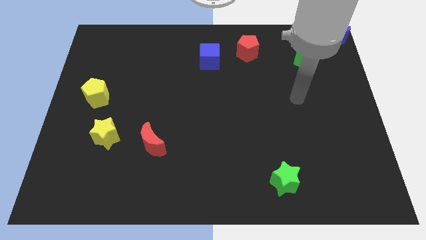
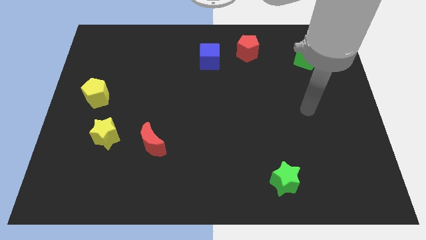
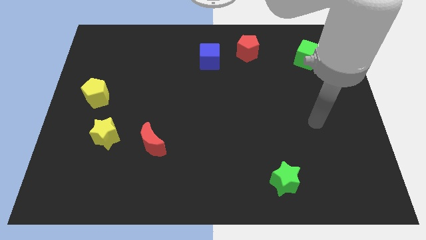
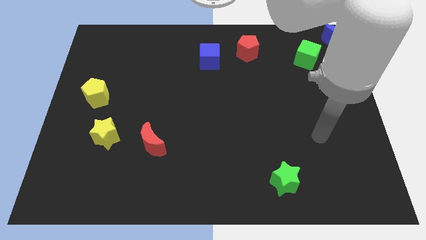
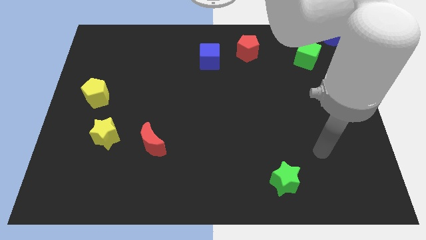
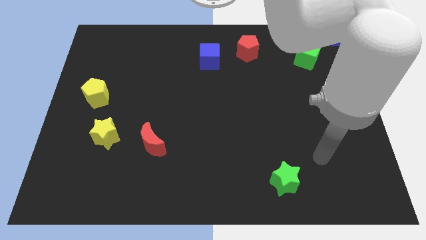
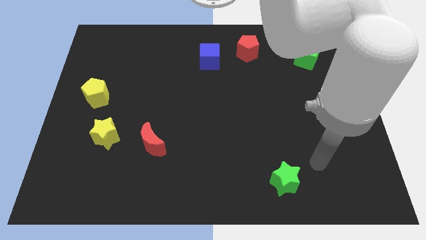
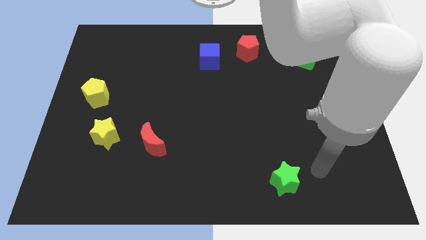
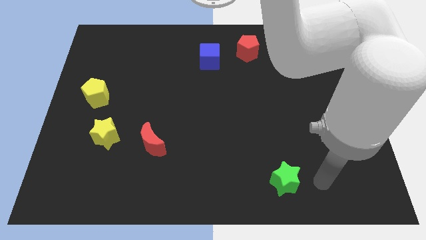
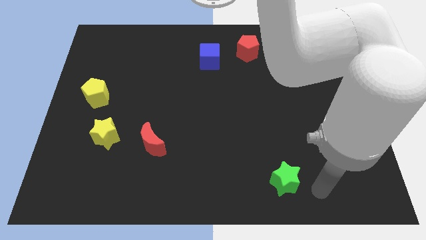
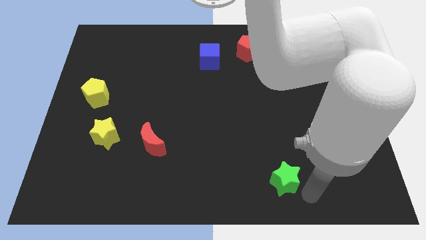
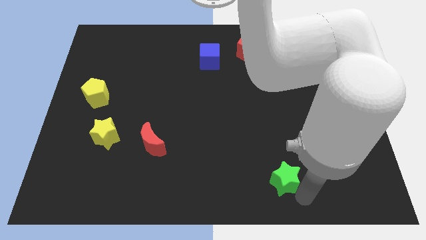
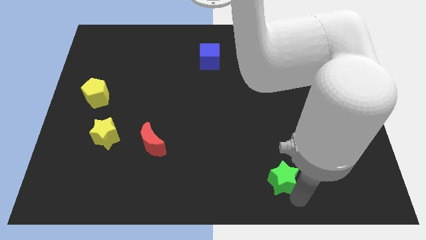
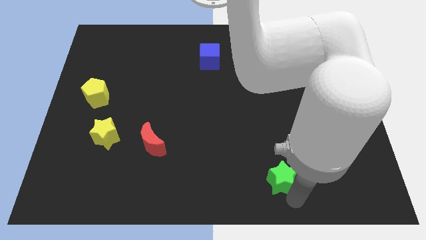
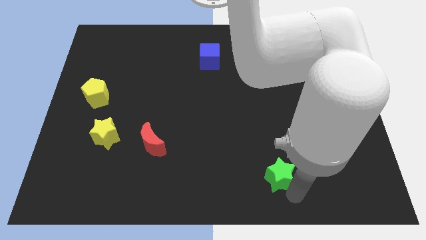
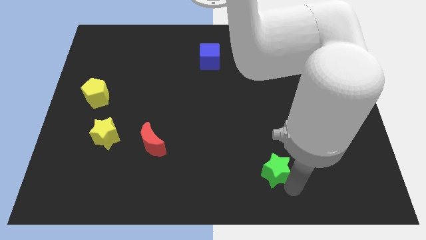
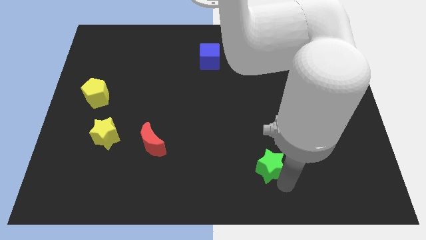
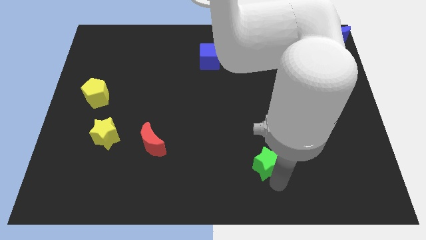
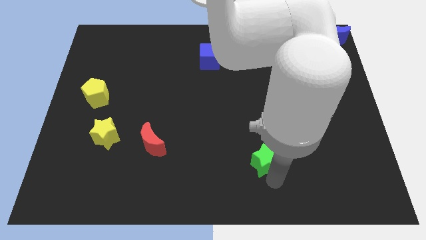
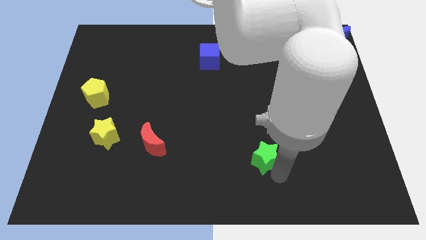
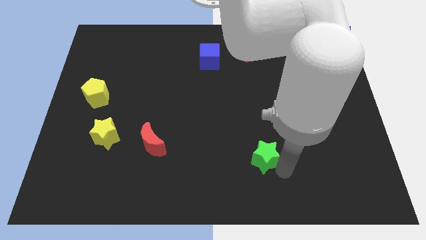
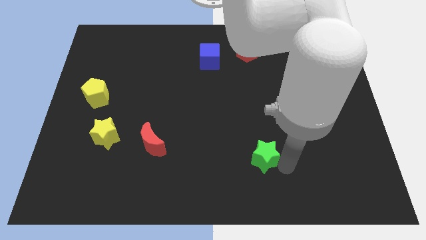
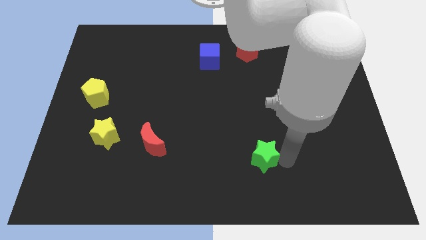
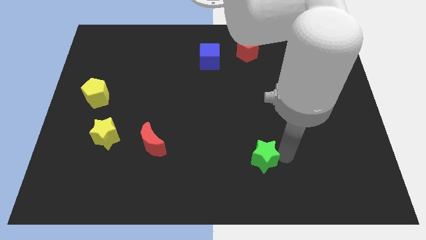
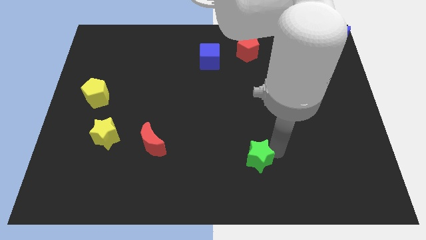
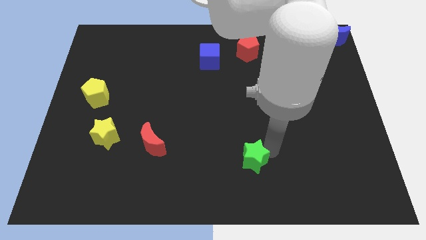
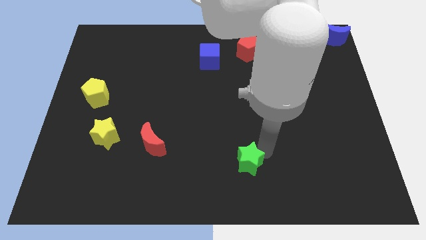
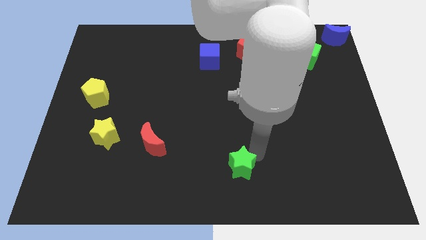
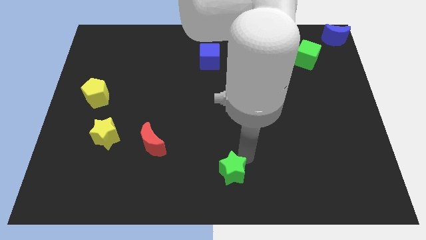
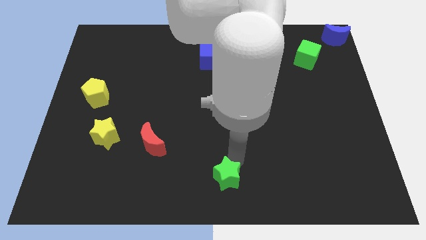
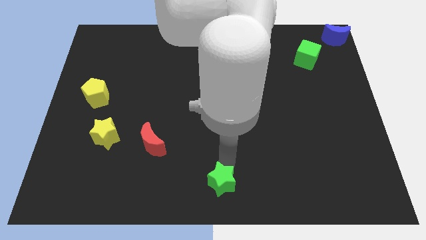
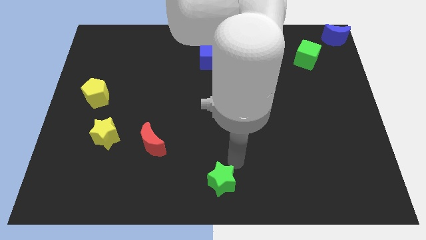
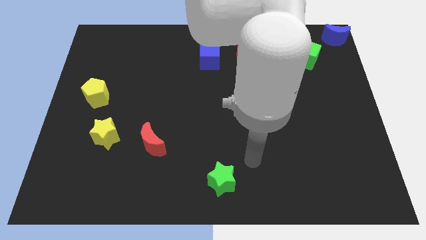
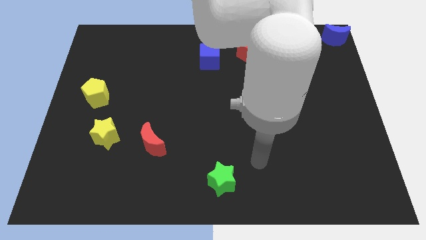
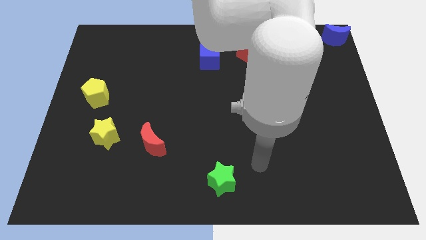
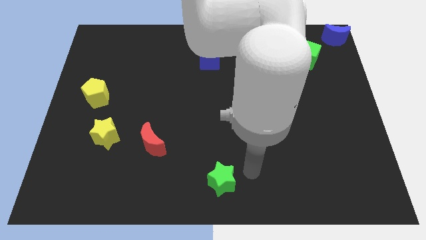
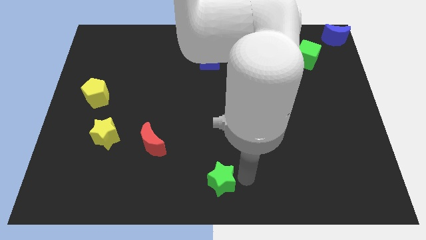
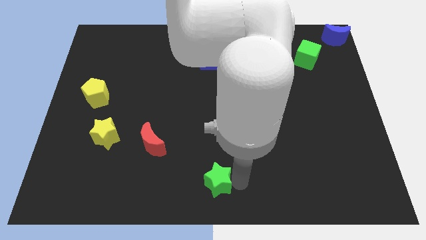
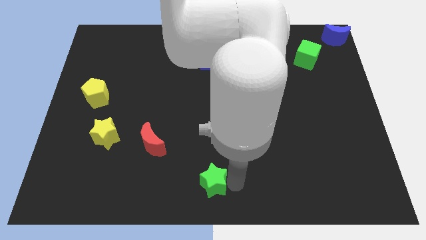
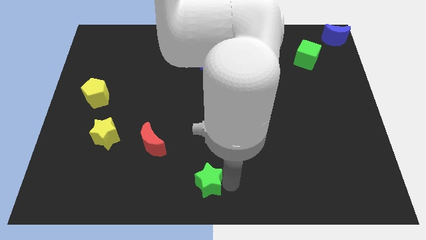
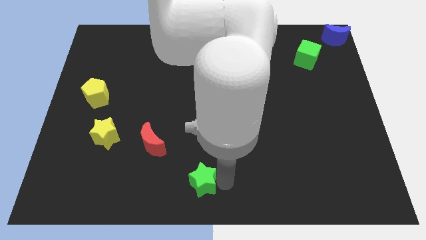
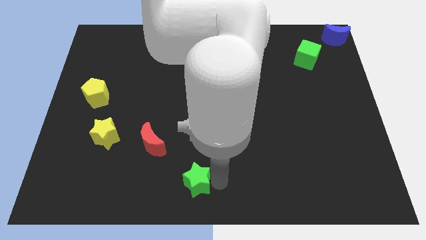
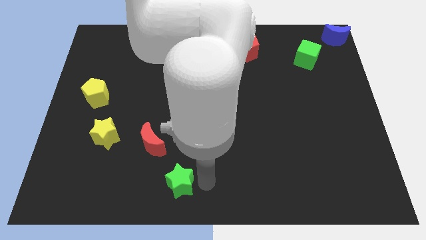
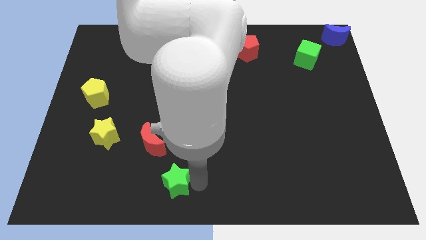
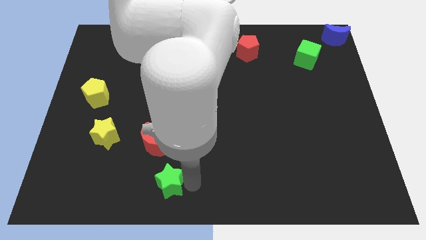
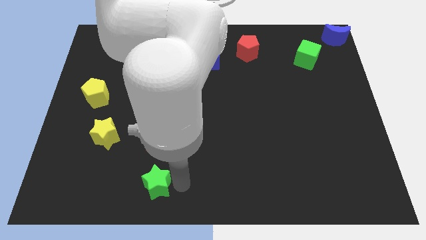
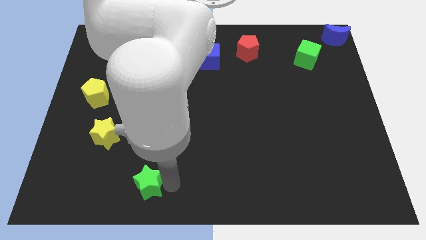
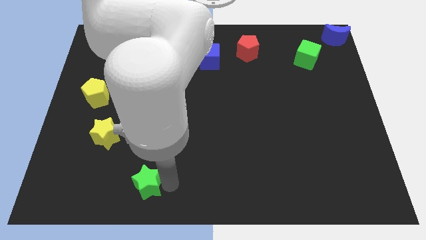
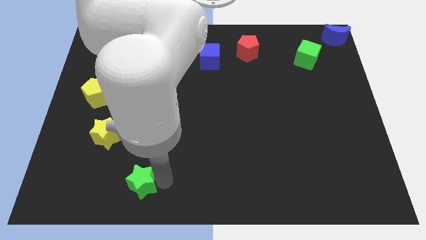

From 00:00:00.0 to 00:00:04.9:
place the green star vertically below the red crescent

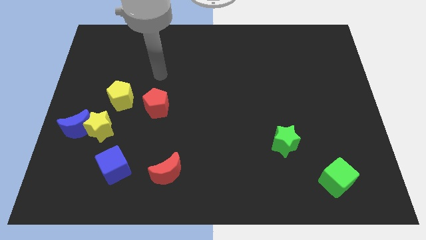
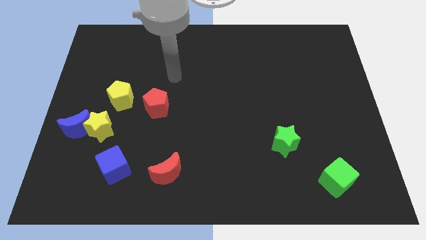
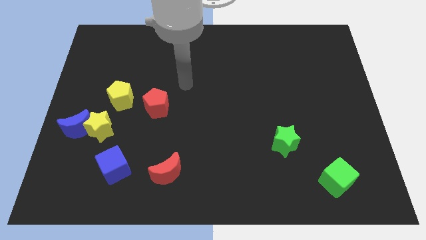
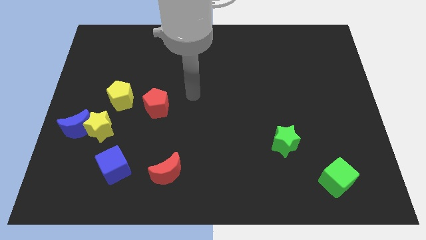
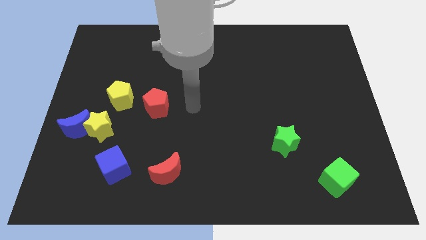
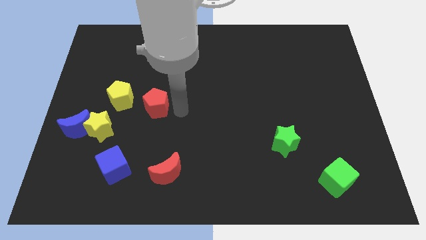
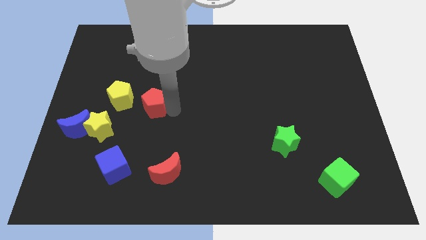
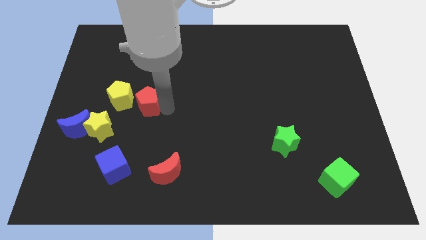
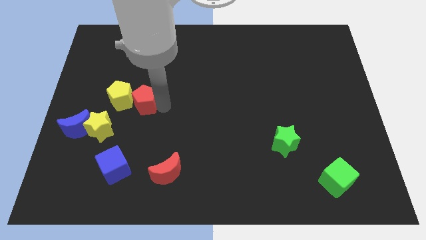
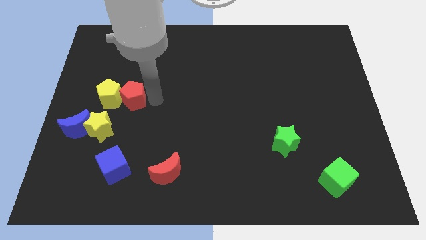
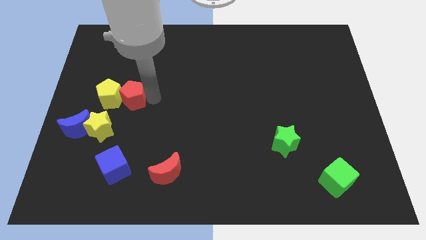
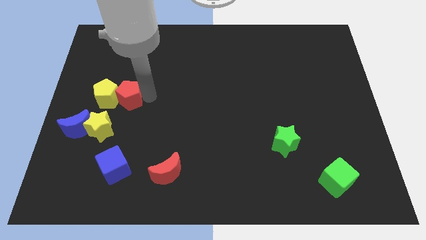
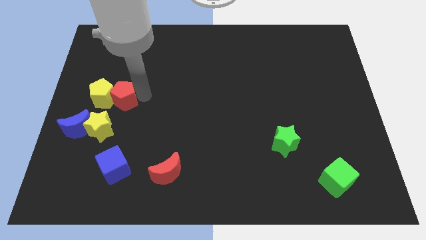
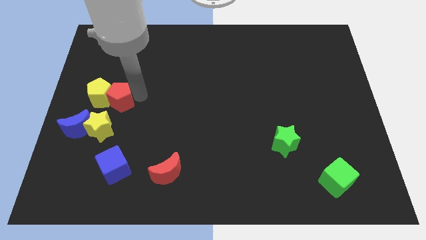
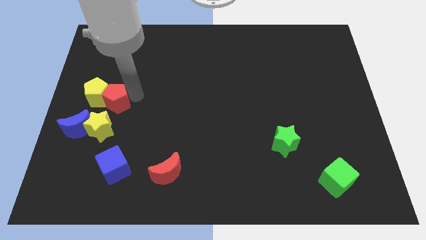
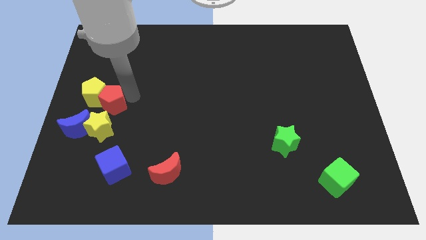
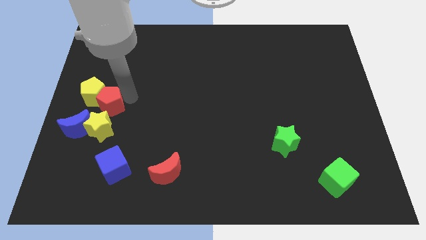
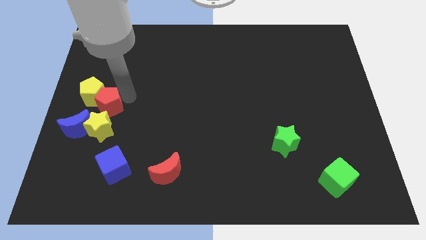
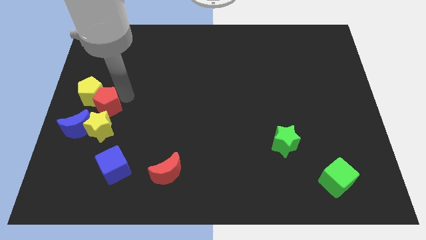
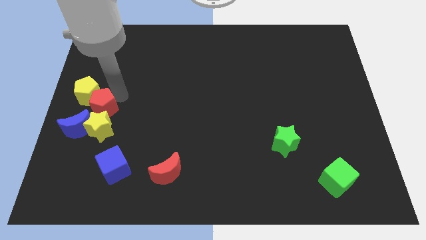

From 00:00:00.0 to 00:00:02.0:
push the red pentagon along with the yellow pentagon to the left side

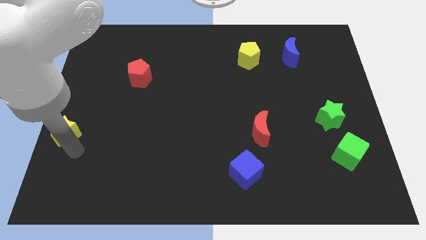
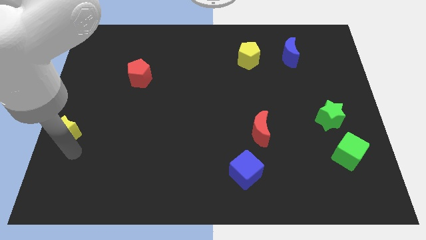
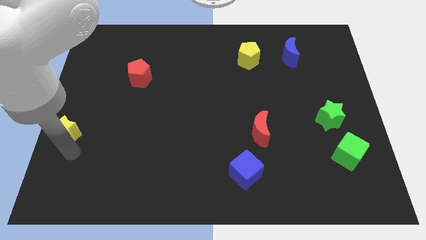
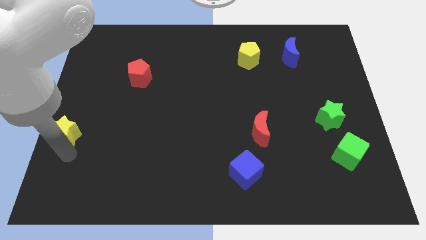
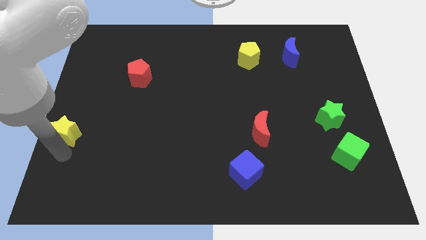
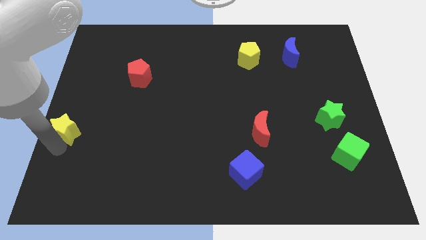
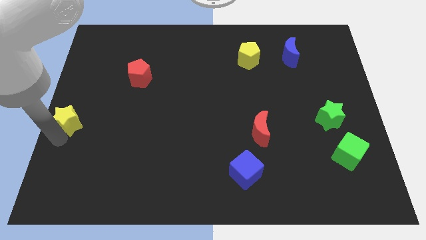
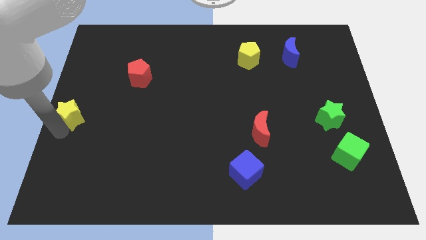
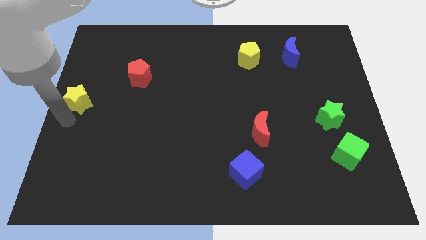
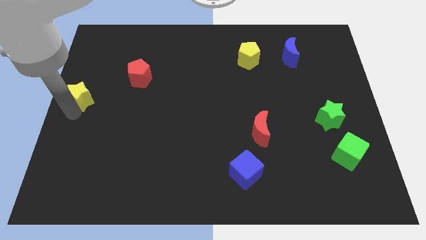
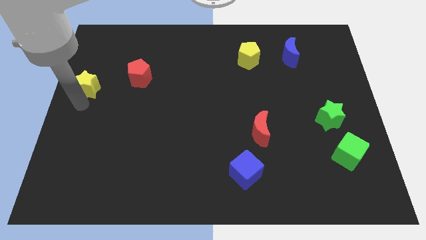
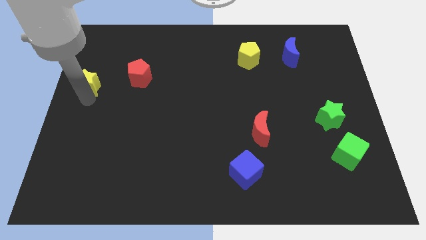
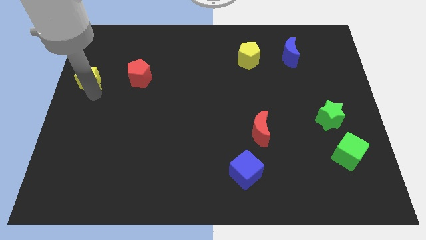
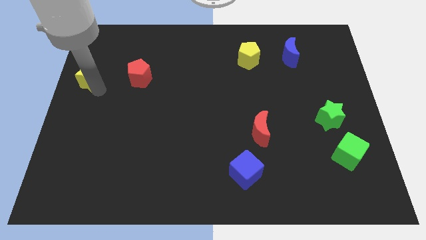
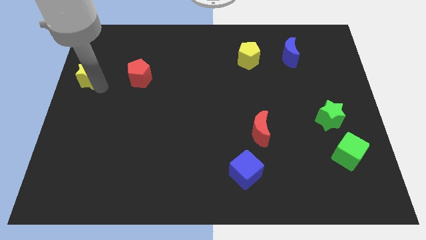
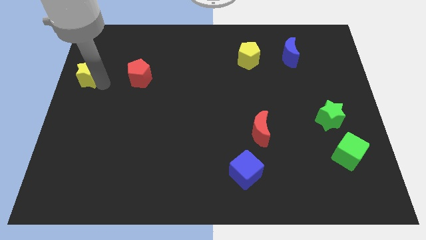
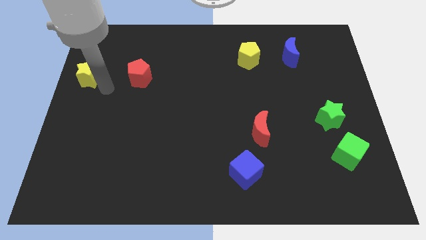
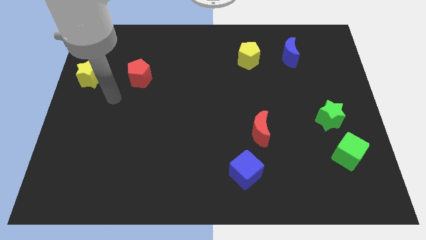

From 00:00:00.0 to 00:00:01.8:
place the yellow star horizontally to the left of the red pentagon

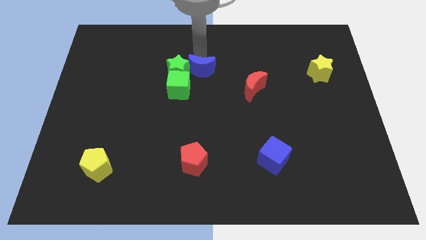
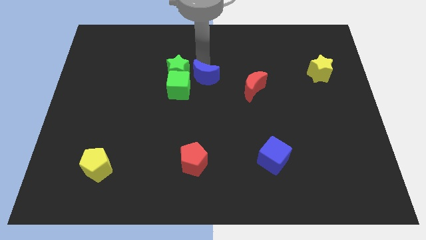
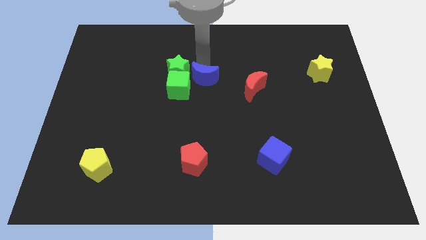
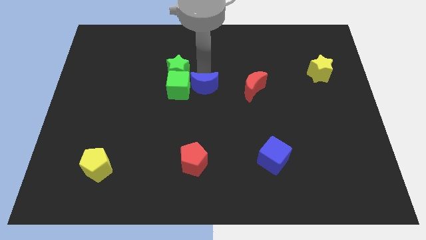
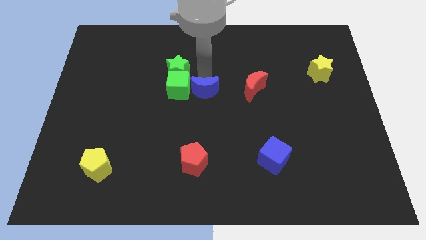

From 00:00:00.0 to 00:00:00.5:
place the blue moon to the right of the green cube
